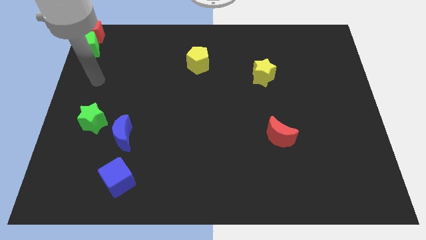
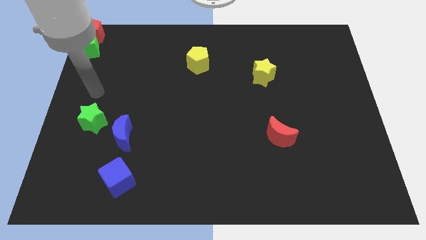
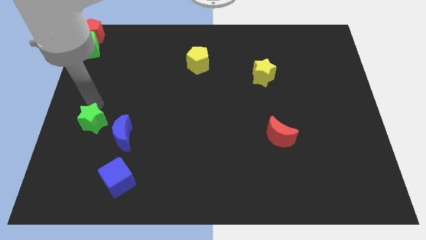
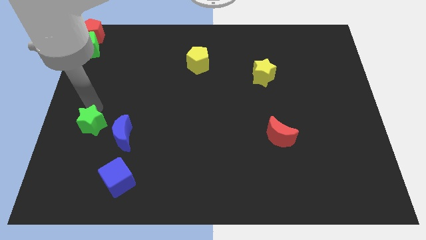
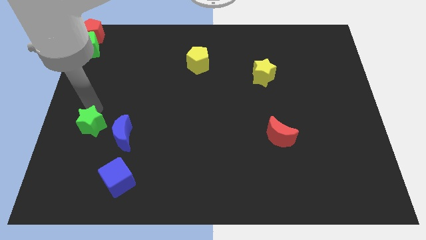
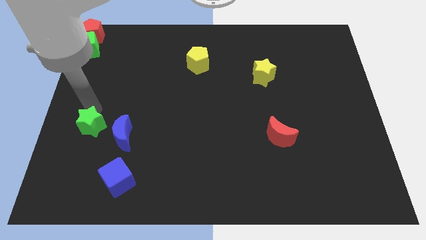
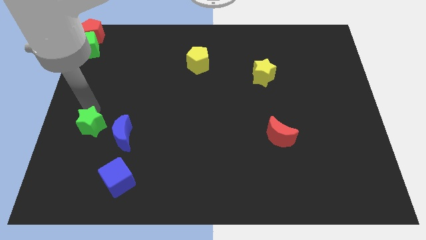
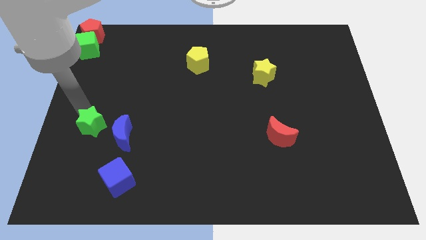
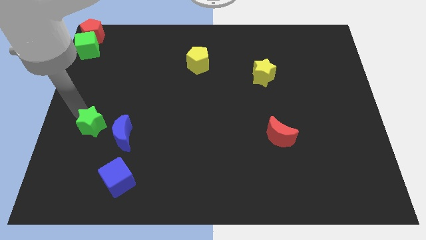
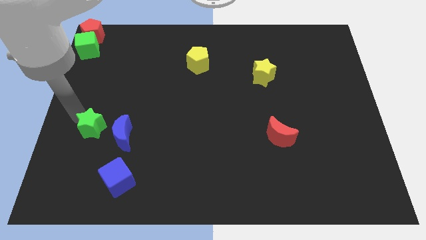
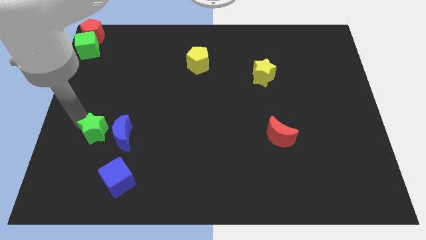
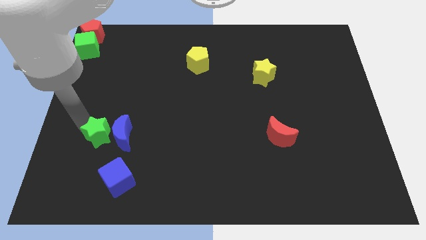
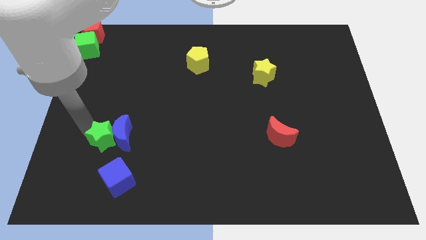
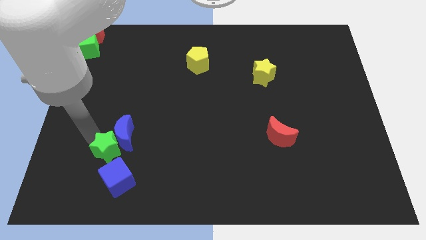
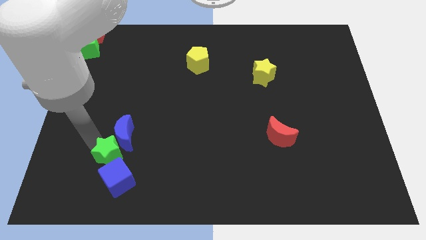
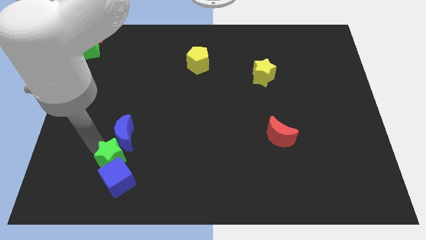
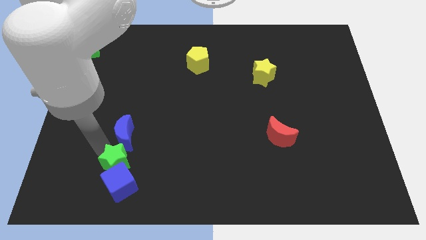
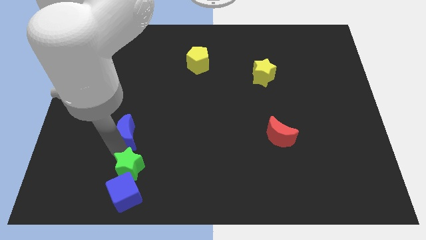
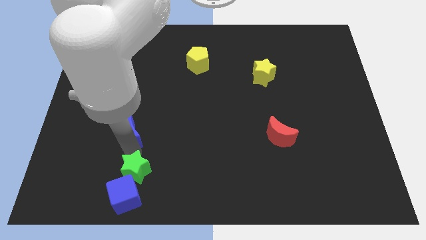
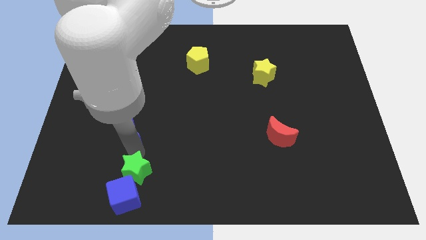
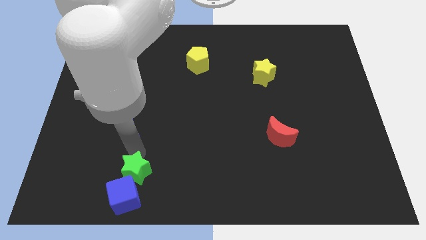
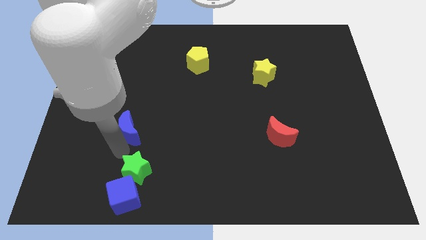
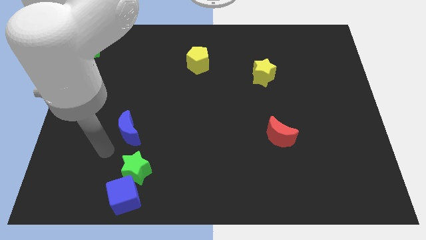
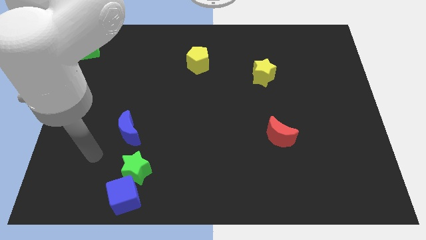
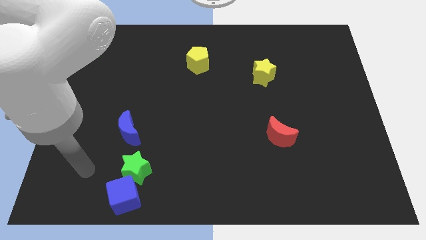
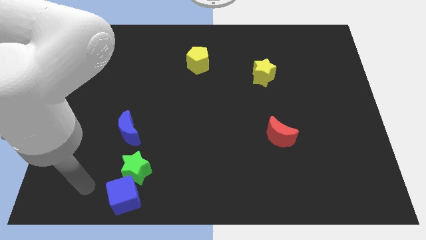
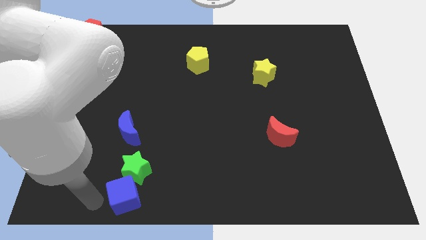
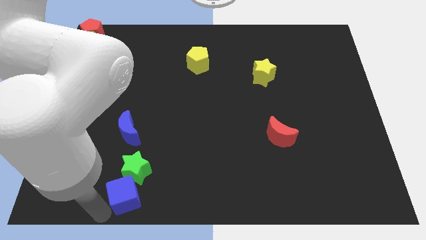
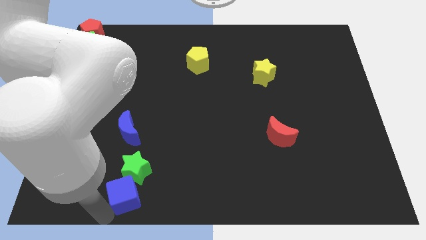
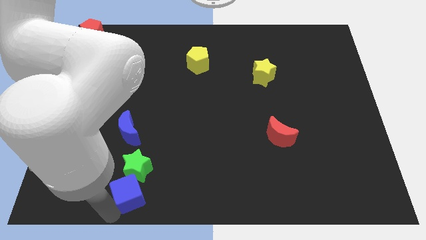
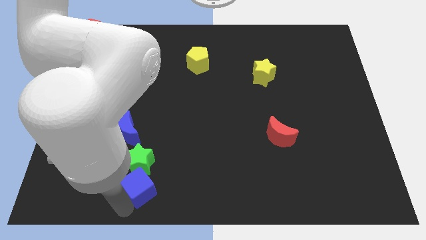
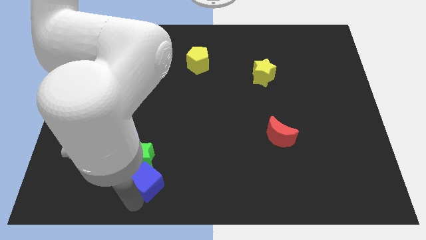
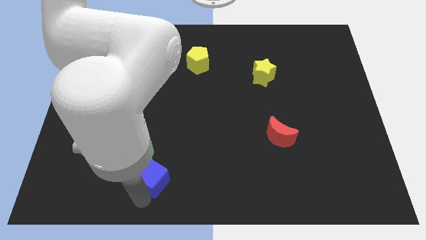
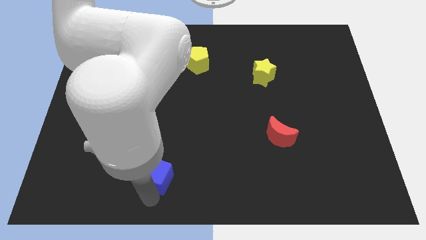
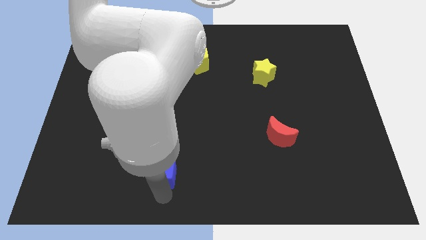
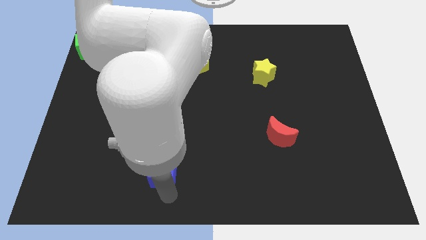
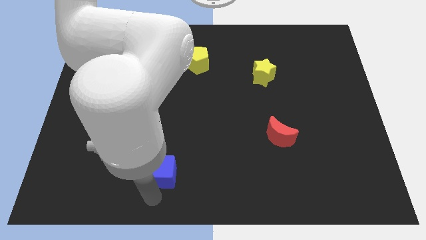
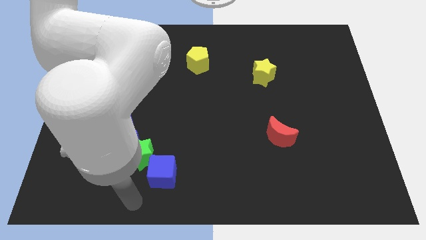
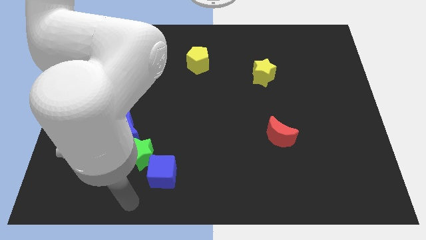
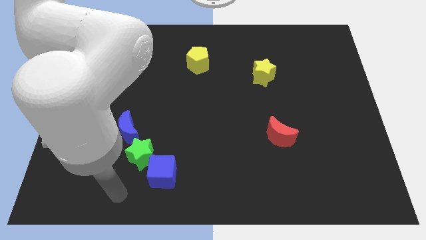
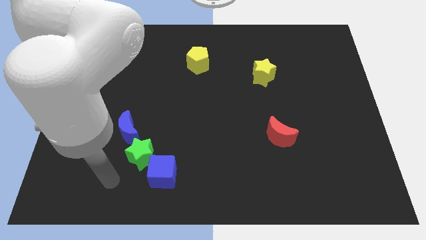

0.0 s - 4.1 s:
put the green star and blue cube diagonally on the bottom right side of the blue crescent

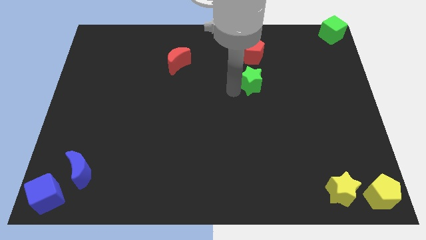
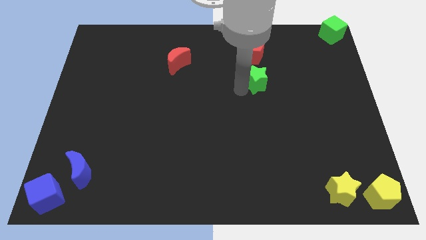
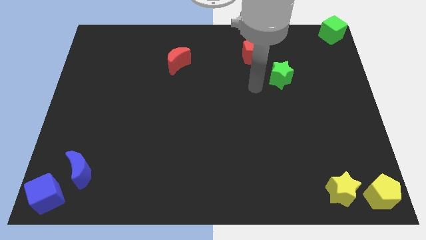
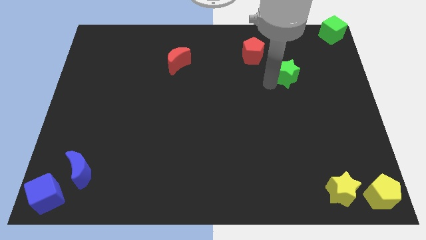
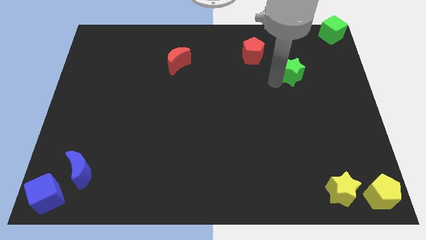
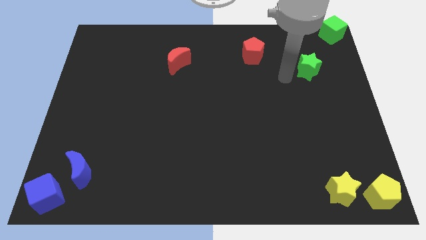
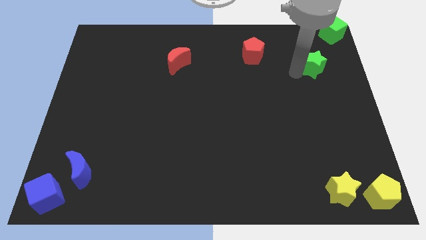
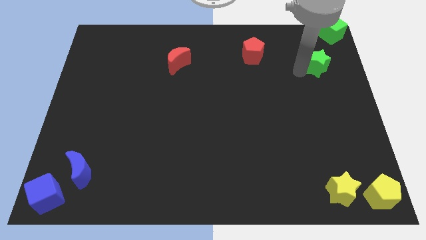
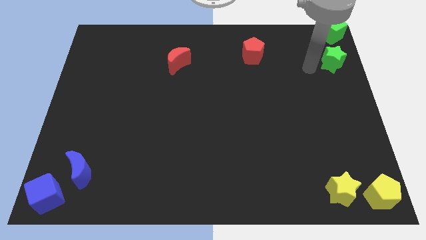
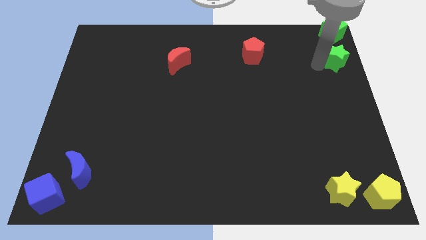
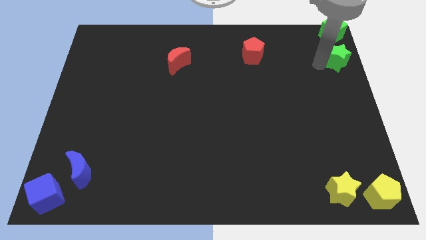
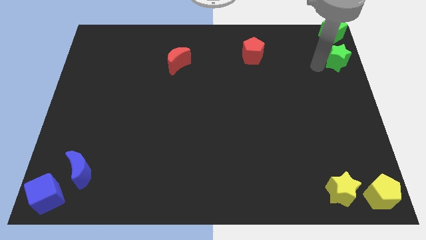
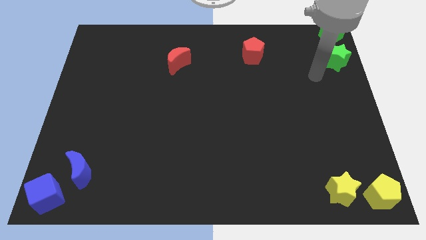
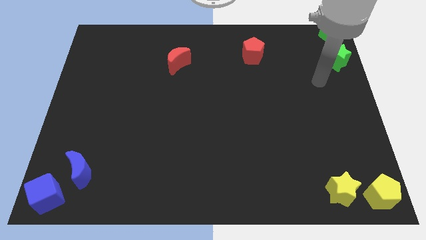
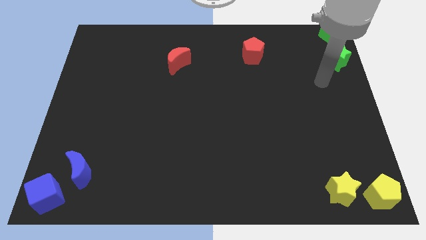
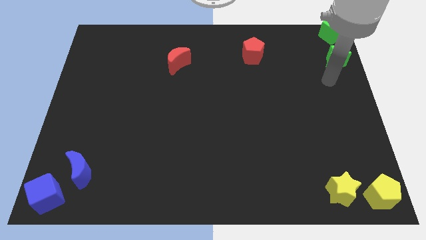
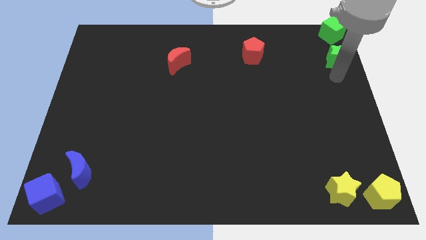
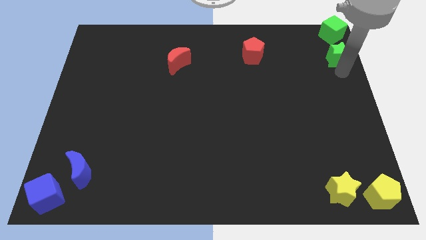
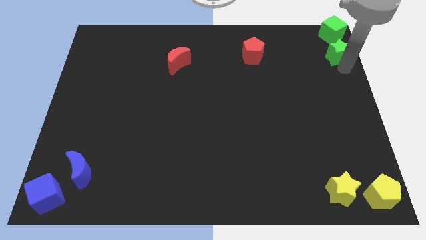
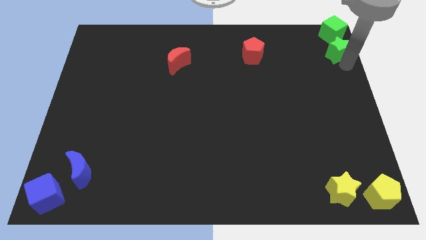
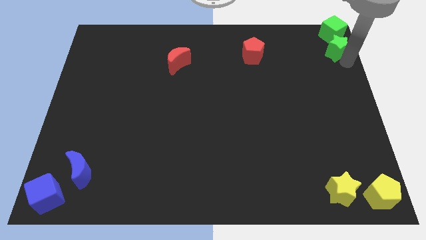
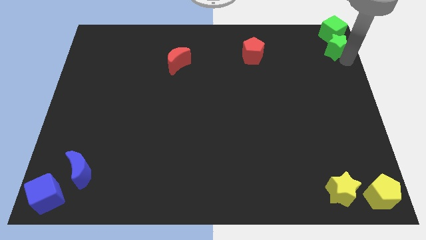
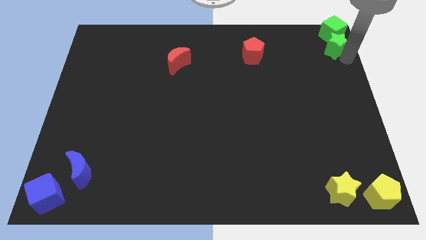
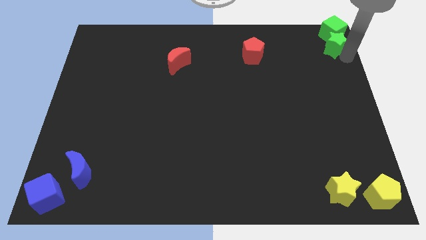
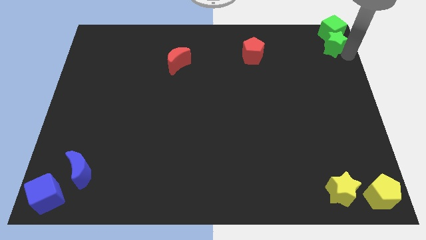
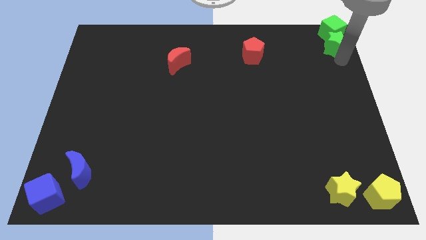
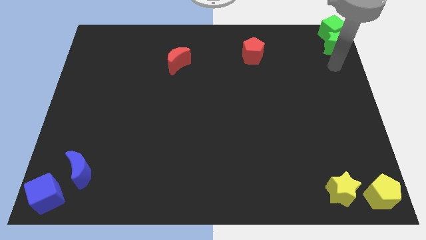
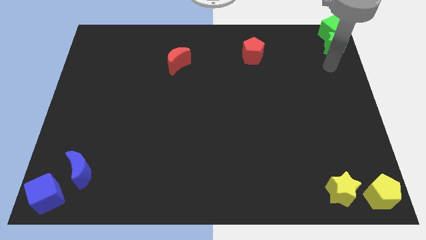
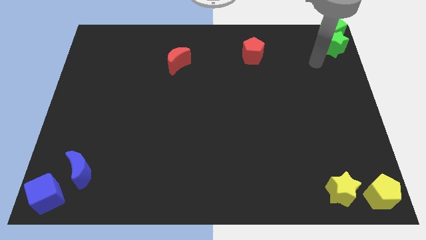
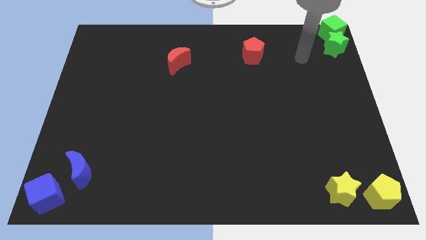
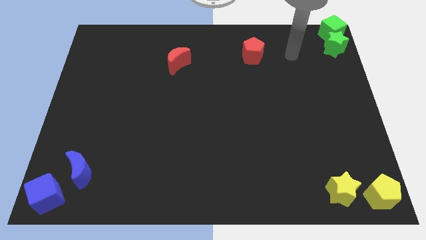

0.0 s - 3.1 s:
push the green star into the green cube

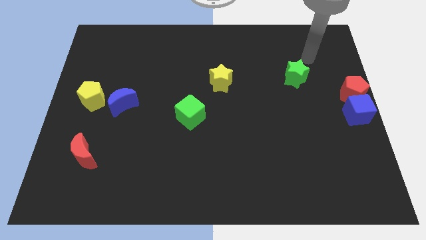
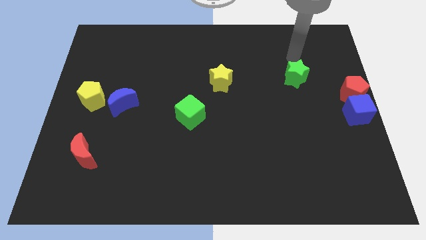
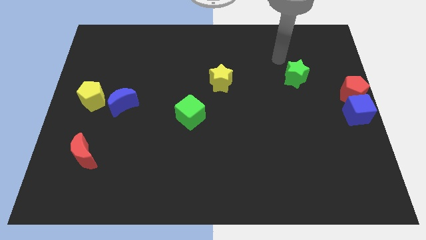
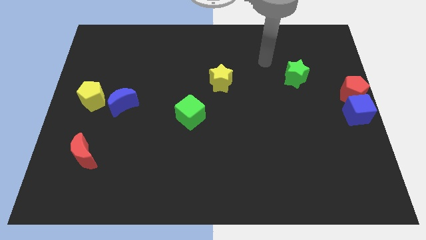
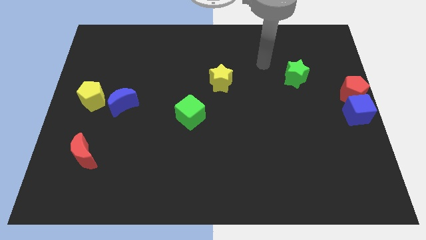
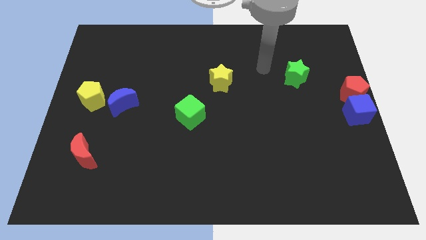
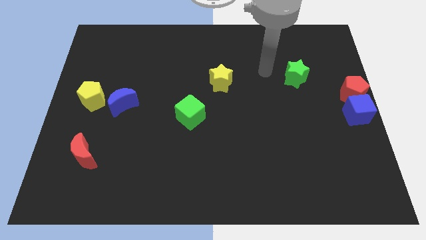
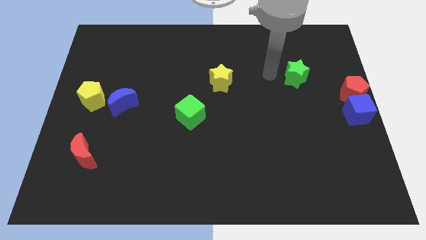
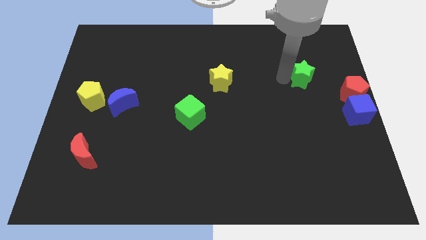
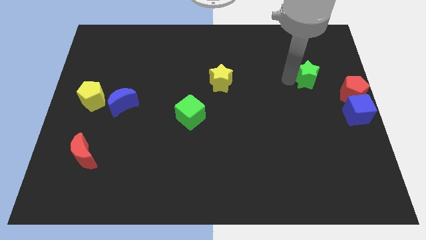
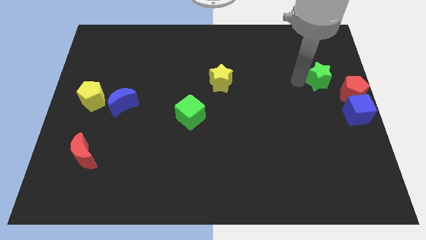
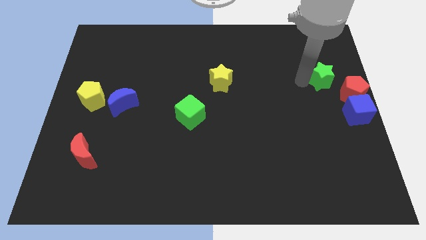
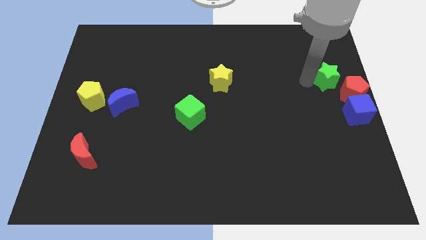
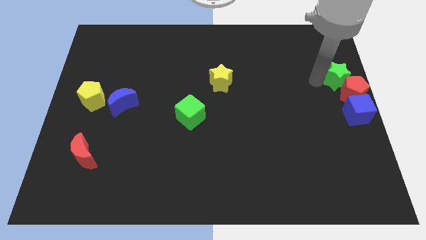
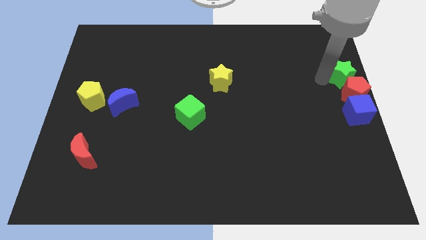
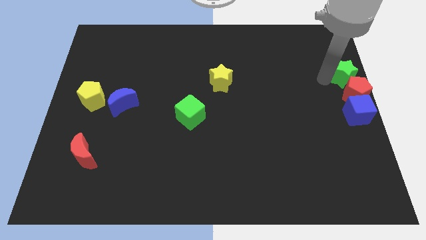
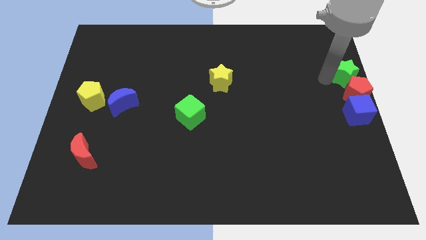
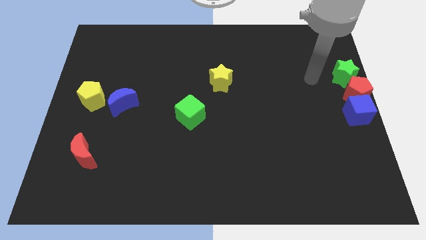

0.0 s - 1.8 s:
place the green star top of the red pentagon
